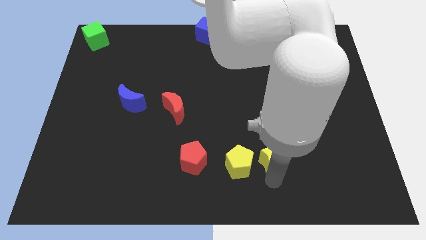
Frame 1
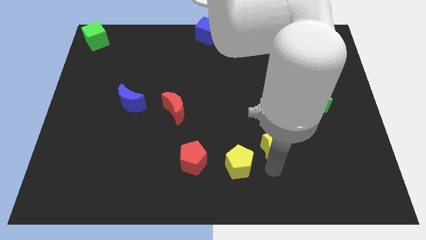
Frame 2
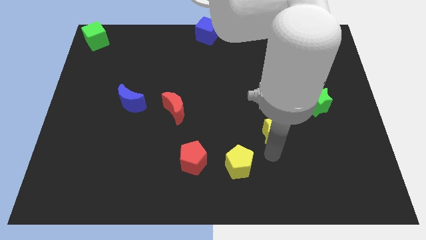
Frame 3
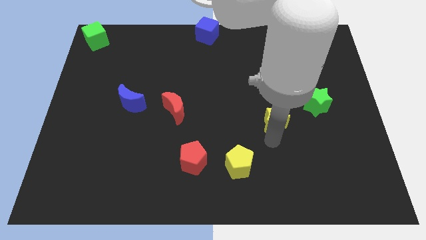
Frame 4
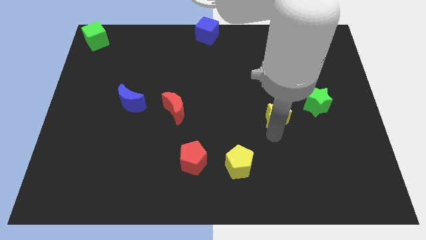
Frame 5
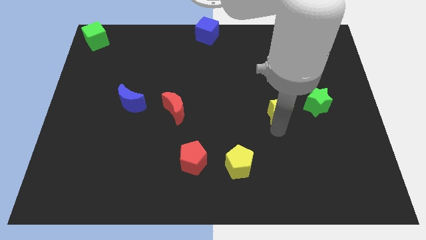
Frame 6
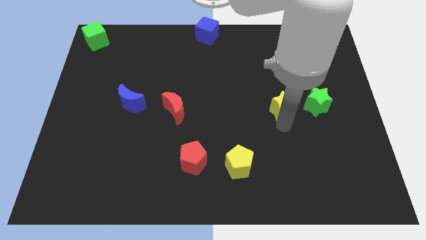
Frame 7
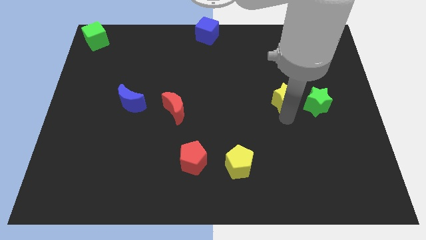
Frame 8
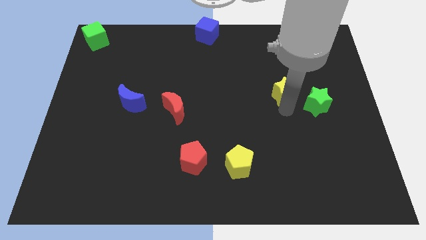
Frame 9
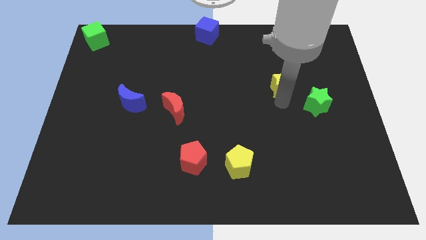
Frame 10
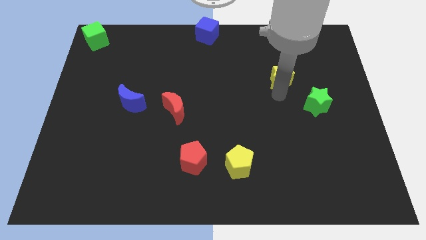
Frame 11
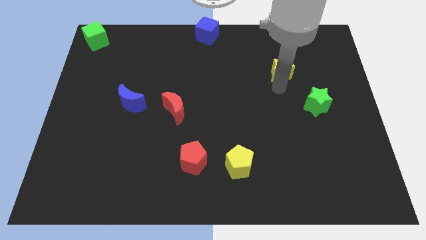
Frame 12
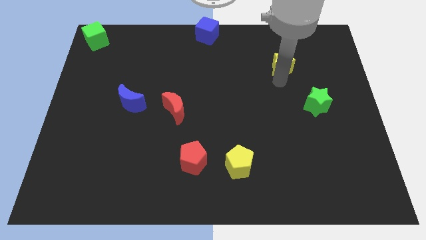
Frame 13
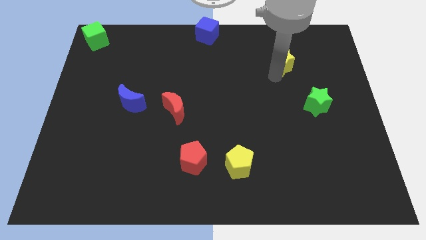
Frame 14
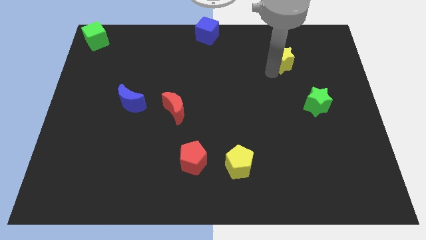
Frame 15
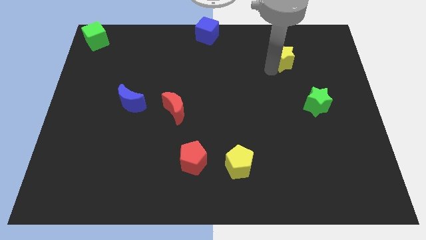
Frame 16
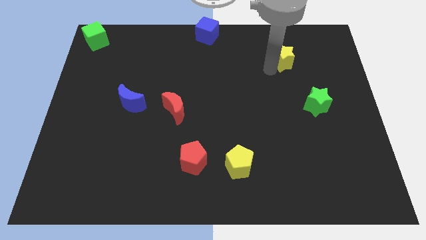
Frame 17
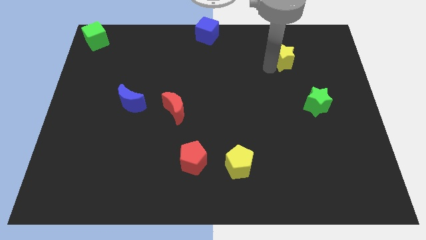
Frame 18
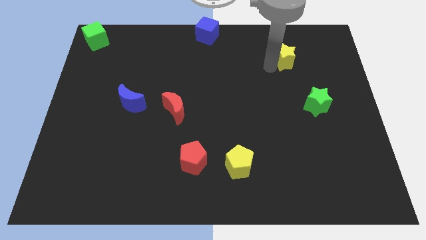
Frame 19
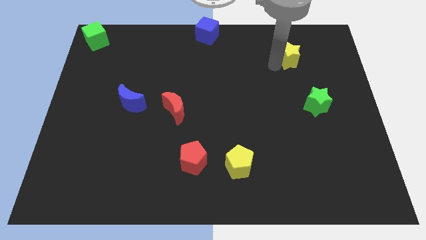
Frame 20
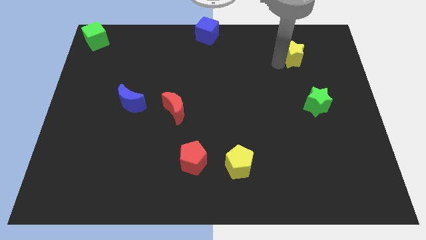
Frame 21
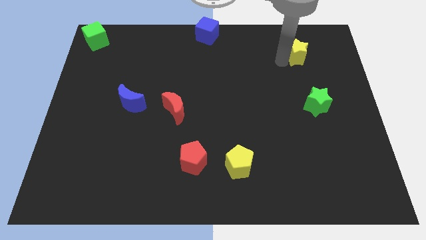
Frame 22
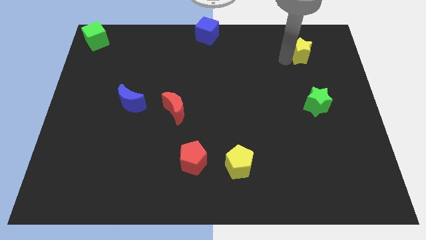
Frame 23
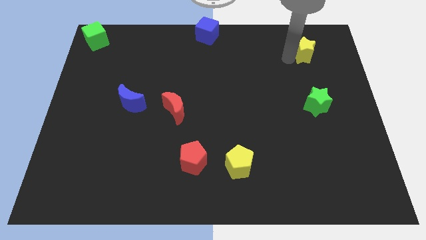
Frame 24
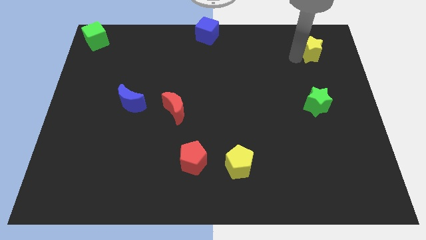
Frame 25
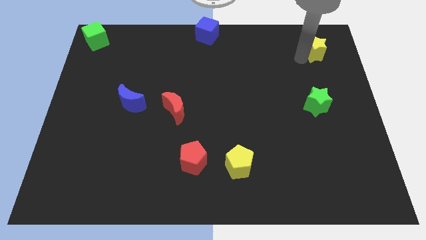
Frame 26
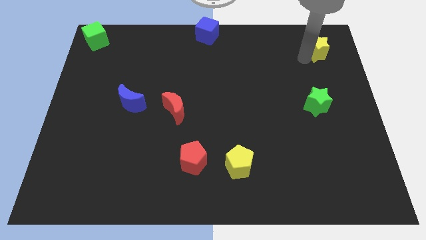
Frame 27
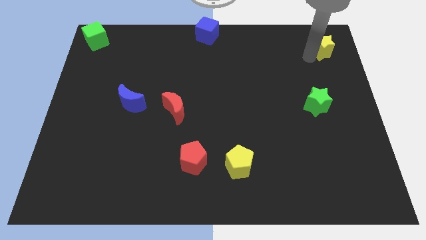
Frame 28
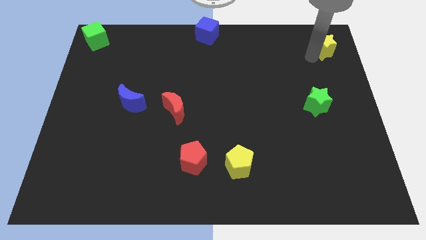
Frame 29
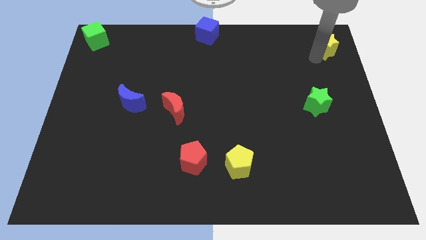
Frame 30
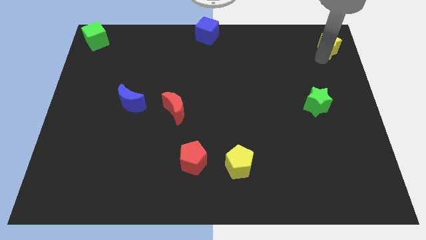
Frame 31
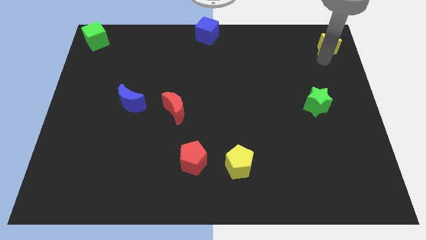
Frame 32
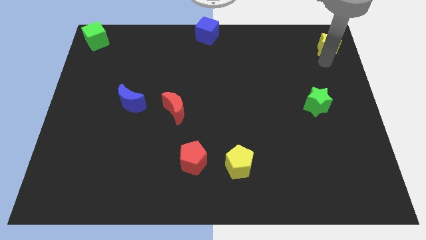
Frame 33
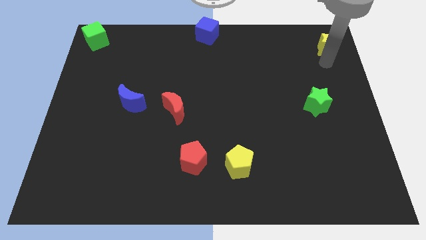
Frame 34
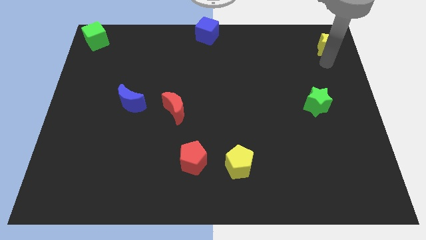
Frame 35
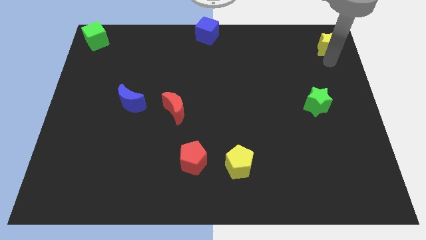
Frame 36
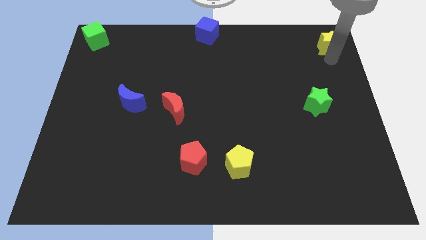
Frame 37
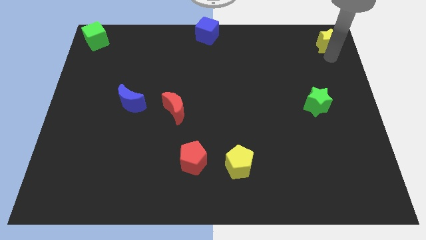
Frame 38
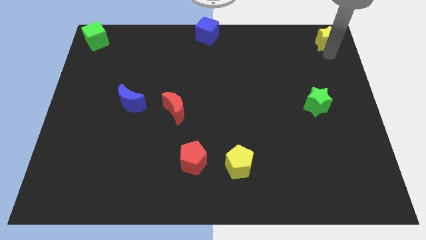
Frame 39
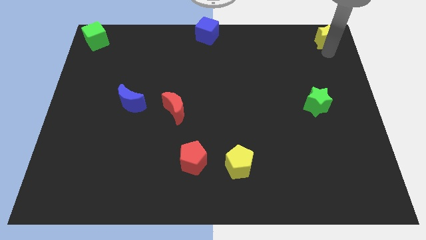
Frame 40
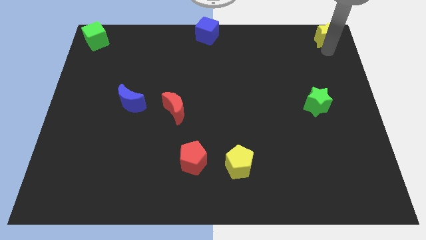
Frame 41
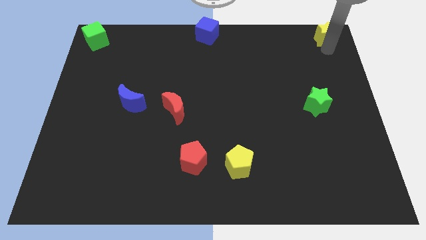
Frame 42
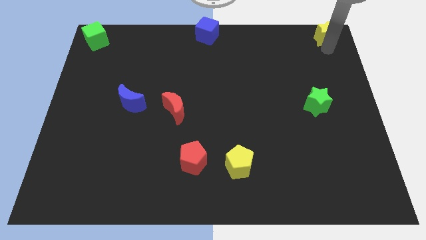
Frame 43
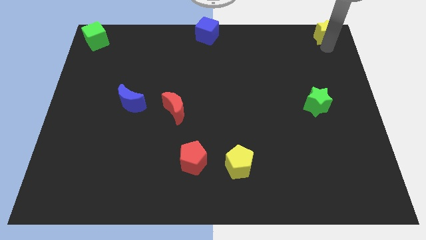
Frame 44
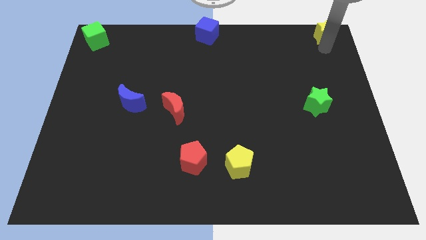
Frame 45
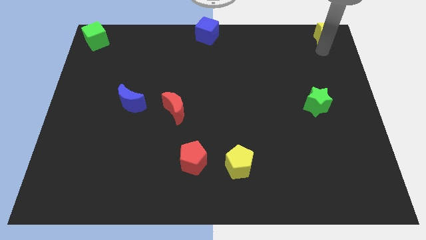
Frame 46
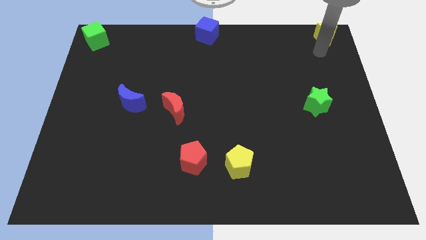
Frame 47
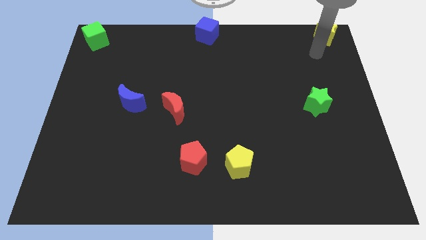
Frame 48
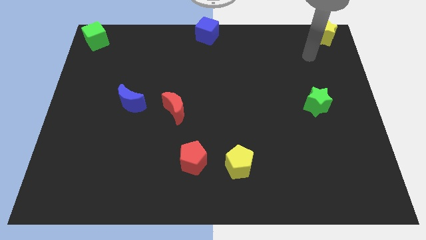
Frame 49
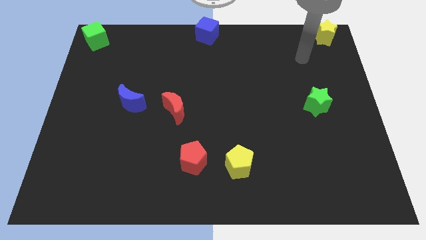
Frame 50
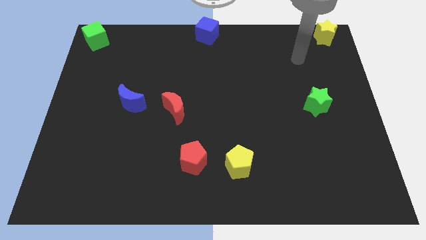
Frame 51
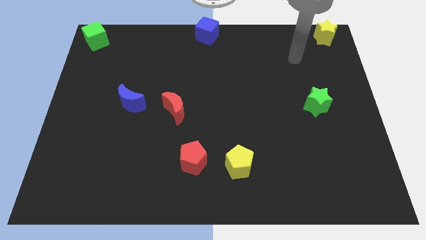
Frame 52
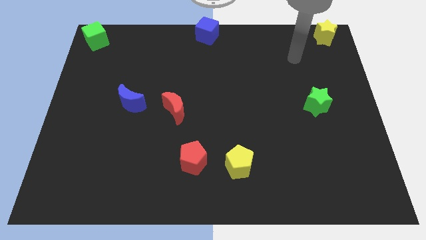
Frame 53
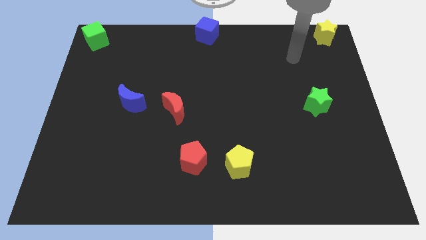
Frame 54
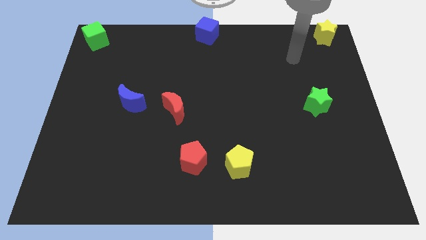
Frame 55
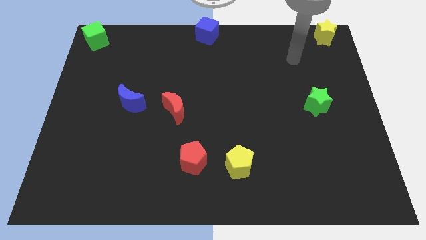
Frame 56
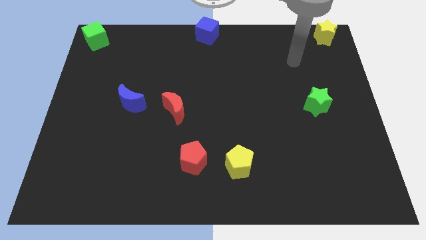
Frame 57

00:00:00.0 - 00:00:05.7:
place the yellow star above the green star

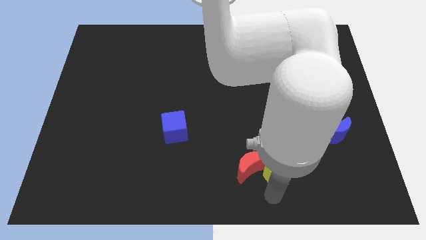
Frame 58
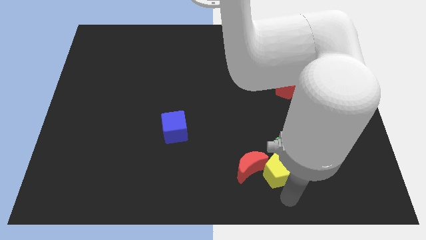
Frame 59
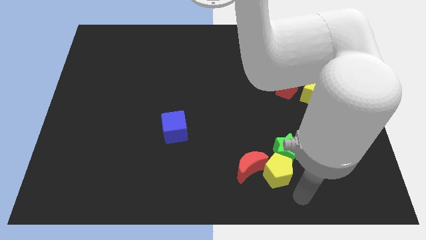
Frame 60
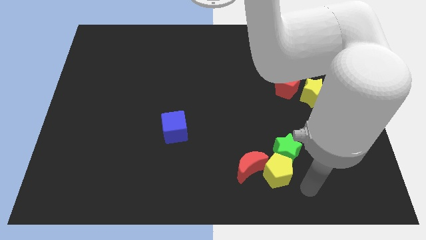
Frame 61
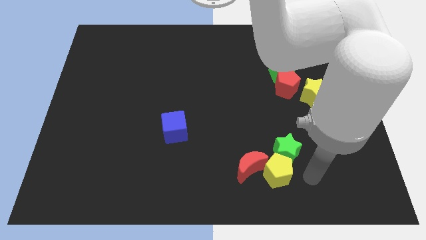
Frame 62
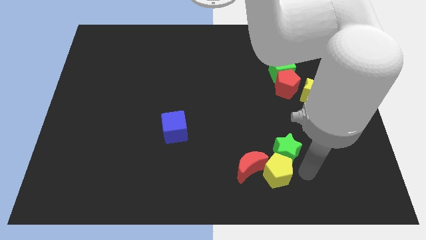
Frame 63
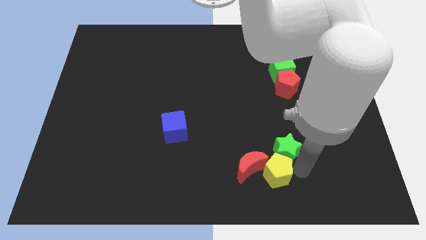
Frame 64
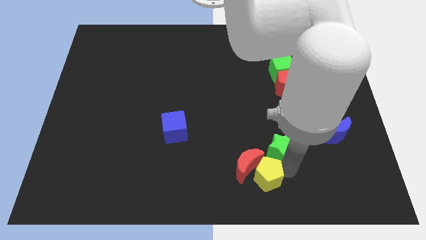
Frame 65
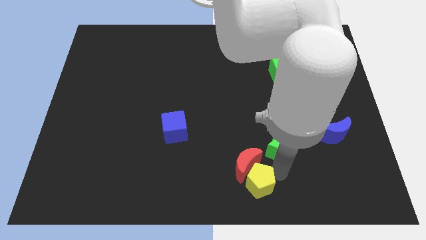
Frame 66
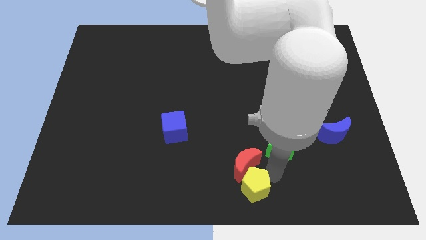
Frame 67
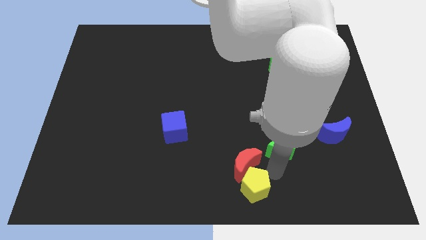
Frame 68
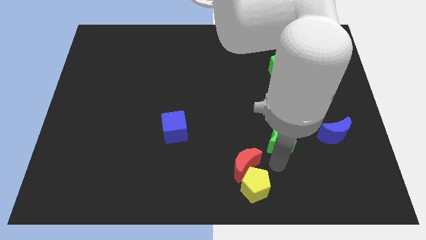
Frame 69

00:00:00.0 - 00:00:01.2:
separate the yellow pentagon and green star

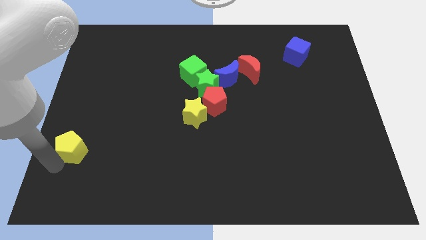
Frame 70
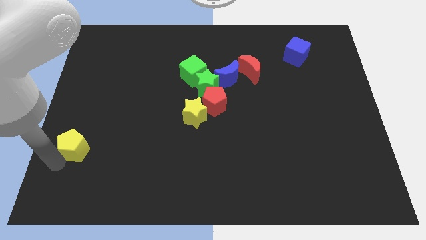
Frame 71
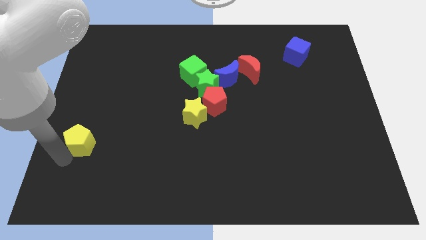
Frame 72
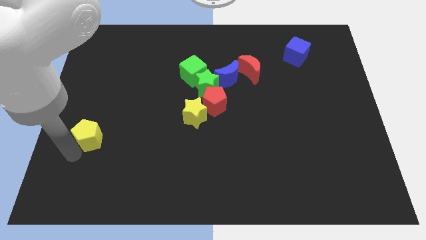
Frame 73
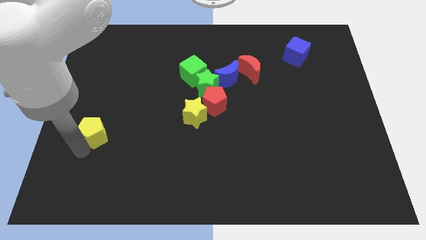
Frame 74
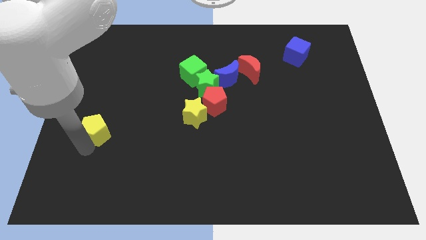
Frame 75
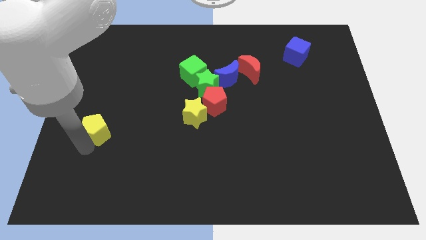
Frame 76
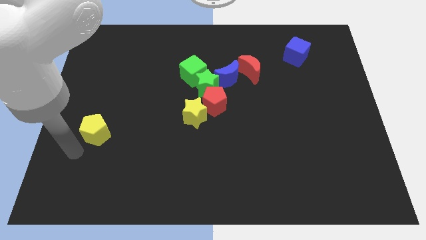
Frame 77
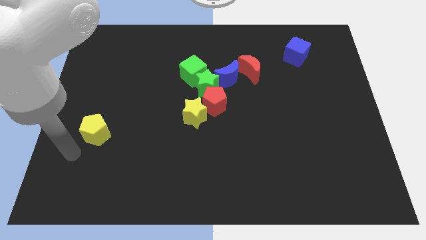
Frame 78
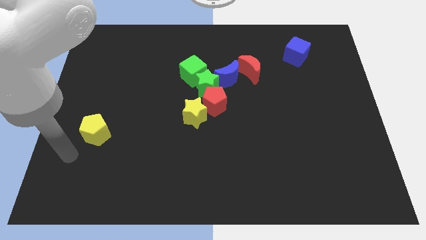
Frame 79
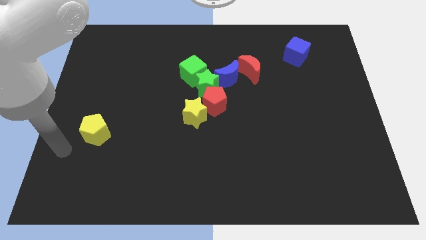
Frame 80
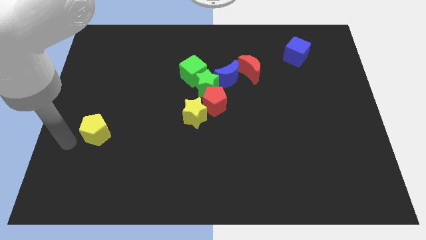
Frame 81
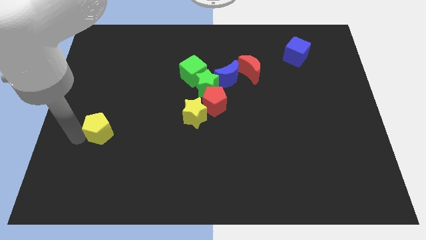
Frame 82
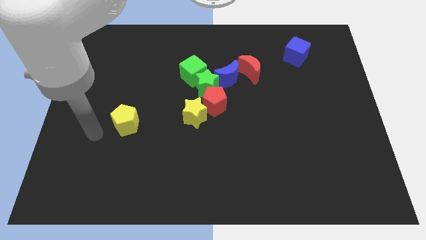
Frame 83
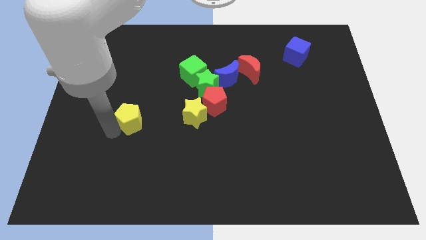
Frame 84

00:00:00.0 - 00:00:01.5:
push the yellow pentagon towards the yellow star

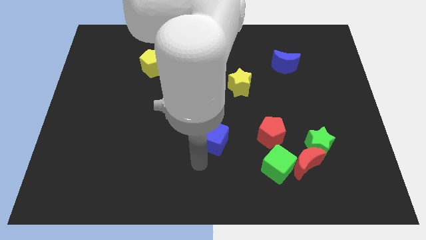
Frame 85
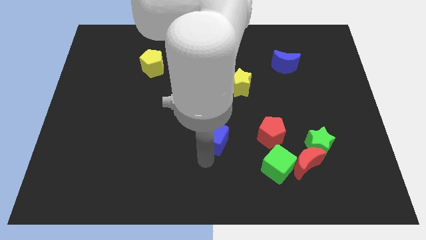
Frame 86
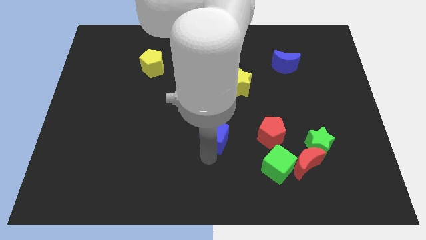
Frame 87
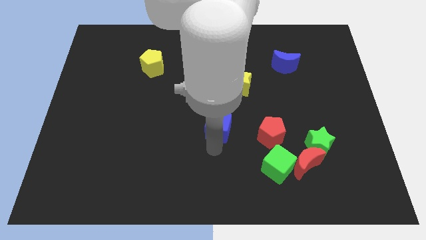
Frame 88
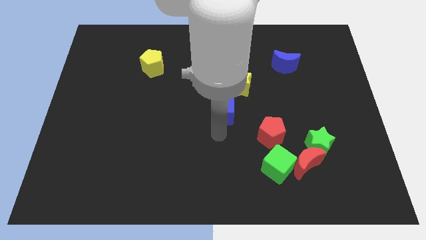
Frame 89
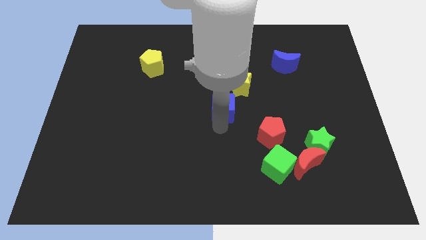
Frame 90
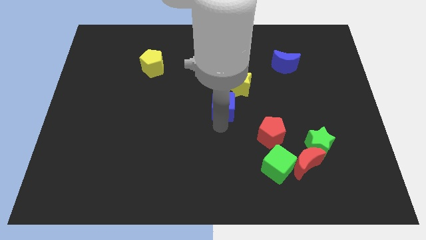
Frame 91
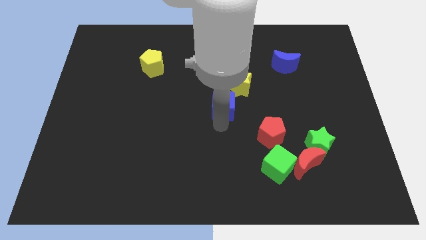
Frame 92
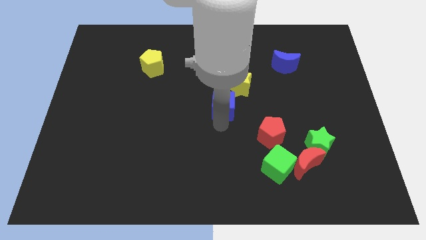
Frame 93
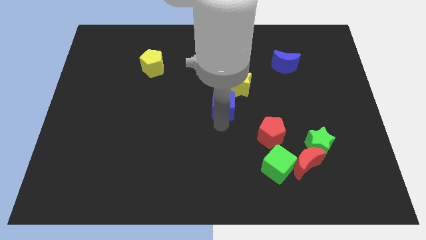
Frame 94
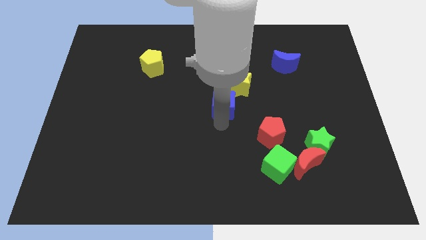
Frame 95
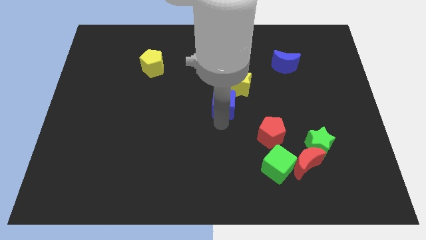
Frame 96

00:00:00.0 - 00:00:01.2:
move the blue cube towards the center
